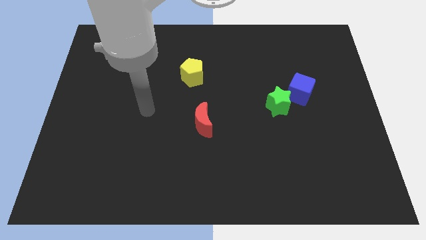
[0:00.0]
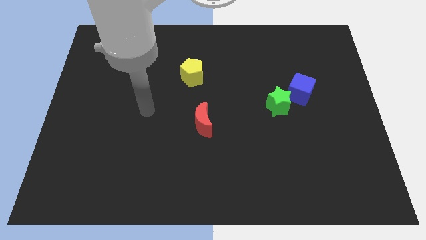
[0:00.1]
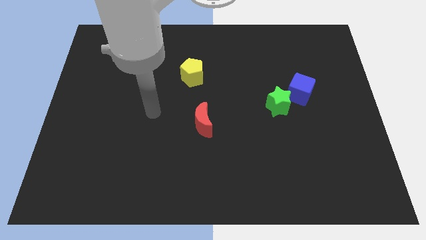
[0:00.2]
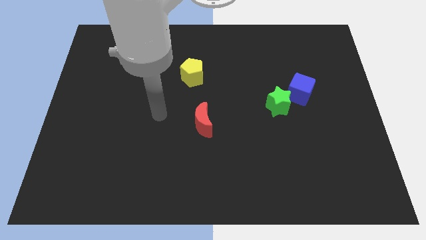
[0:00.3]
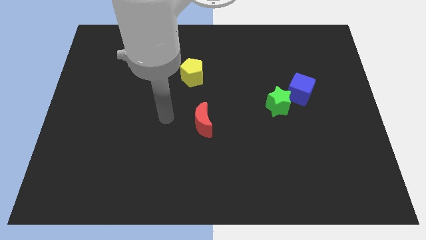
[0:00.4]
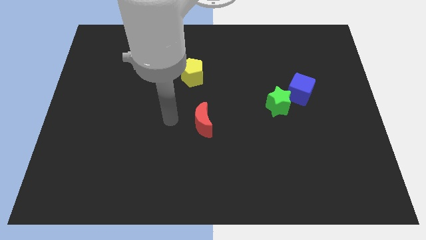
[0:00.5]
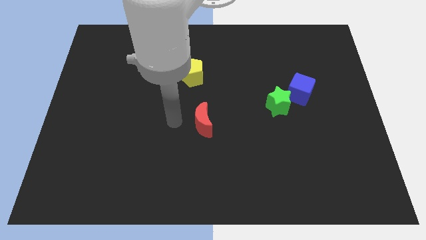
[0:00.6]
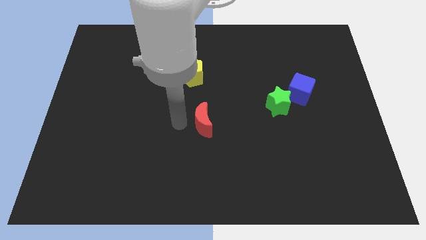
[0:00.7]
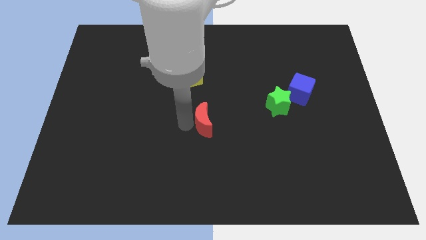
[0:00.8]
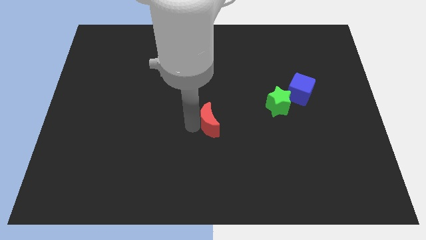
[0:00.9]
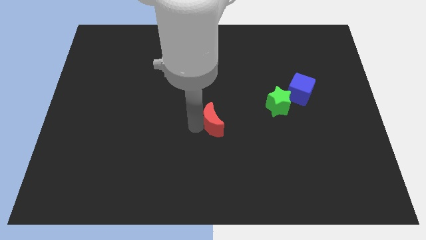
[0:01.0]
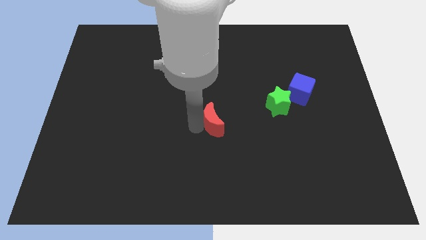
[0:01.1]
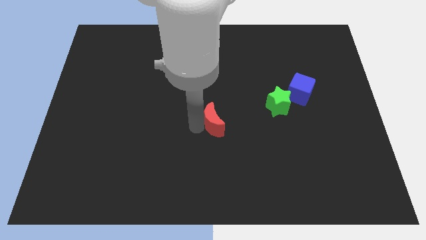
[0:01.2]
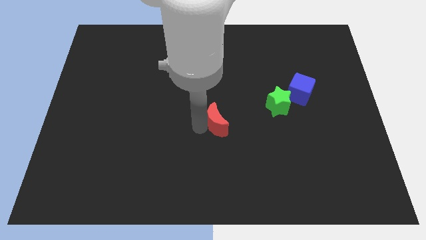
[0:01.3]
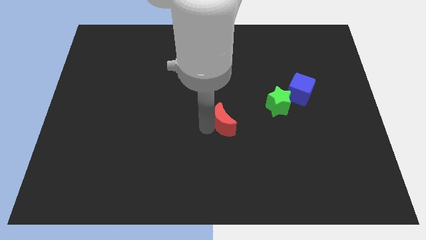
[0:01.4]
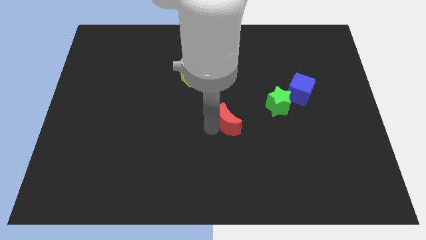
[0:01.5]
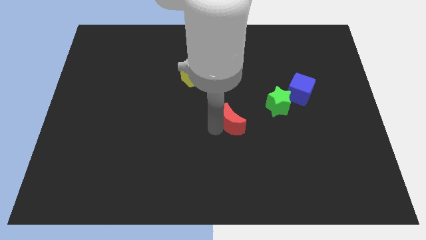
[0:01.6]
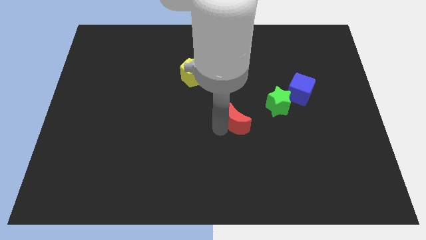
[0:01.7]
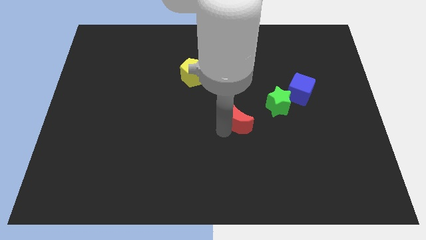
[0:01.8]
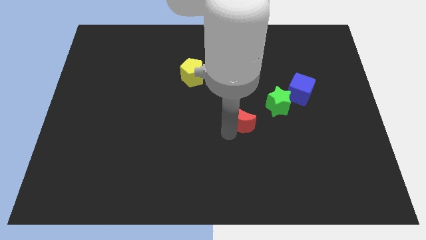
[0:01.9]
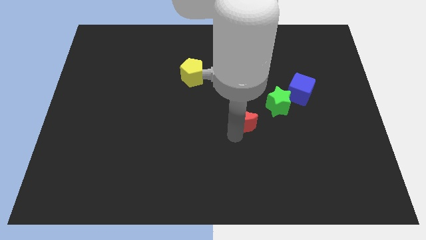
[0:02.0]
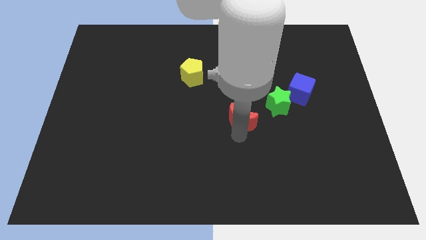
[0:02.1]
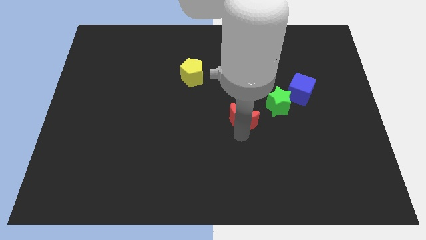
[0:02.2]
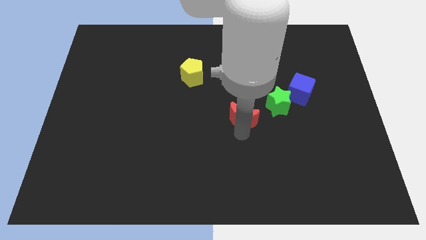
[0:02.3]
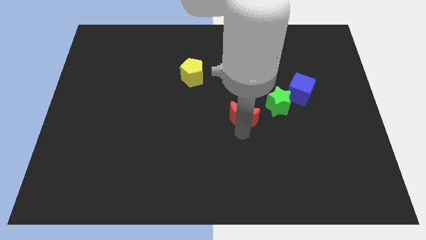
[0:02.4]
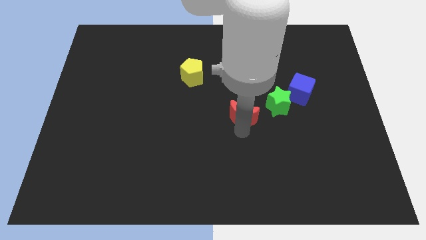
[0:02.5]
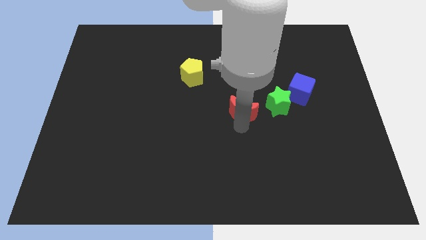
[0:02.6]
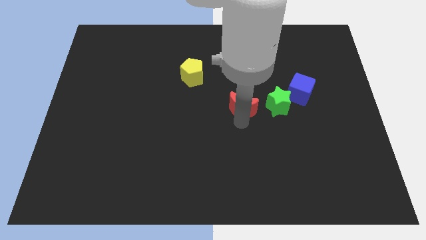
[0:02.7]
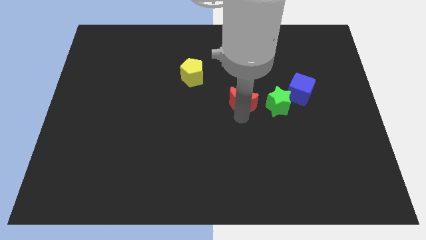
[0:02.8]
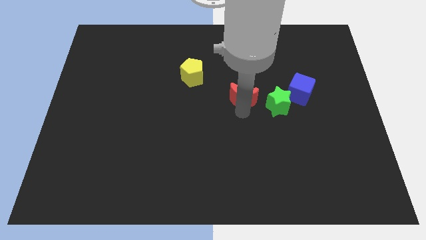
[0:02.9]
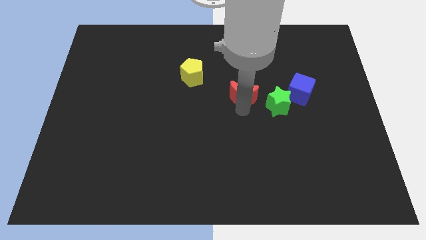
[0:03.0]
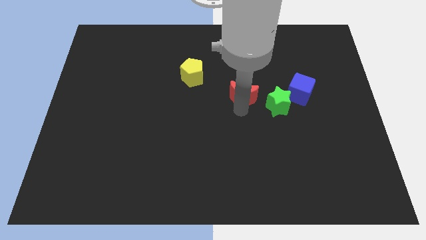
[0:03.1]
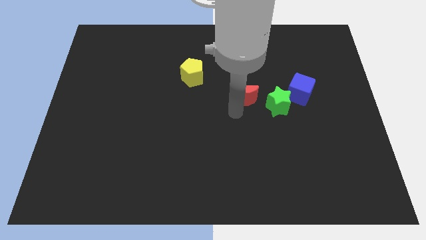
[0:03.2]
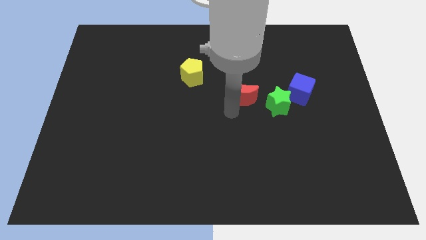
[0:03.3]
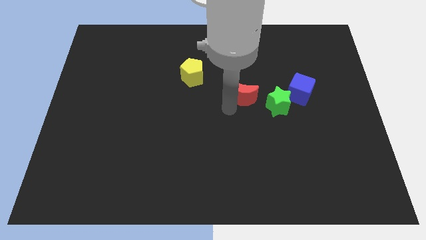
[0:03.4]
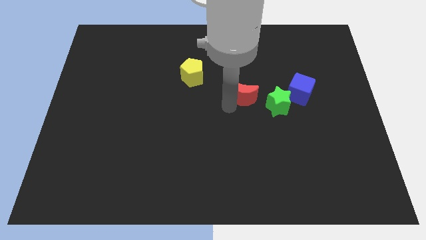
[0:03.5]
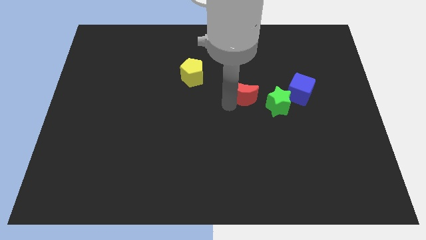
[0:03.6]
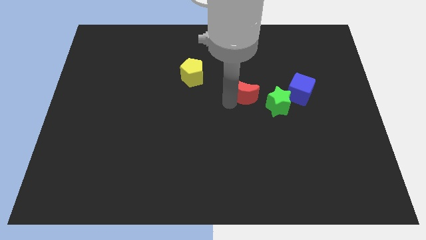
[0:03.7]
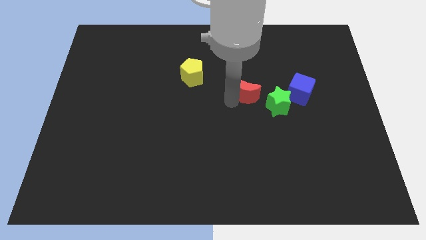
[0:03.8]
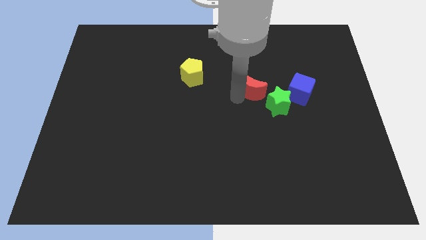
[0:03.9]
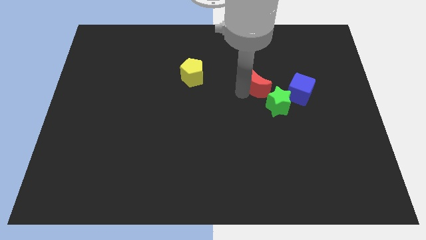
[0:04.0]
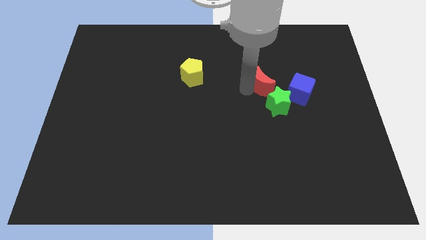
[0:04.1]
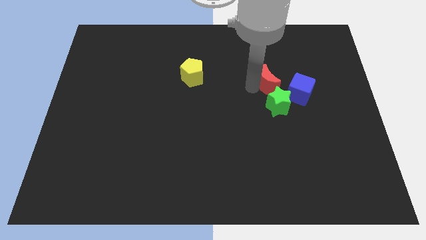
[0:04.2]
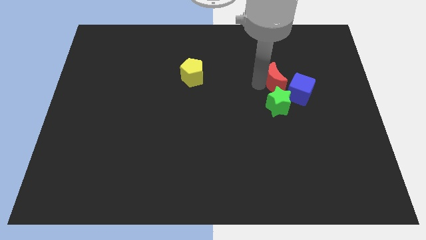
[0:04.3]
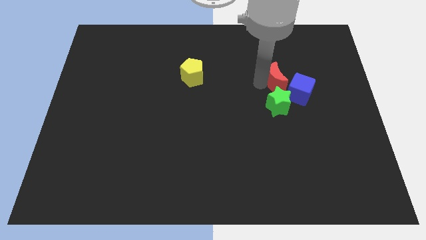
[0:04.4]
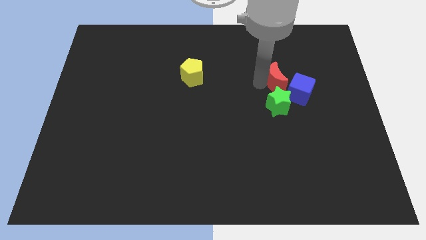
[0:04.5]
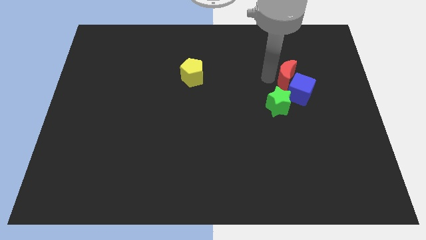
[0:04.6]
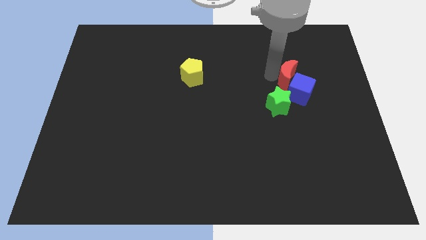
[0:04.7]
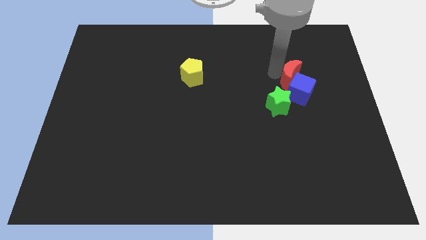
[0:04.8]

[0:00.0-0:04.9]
put the moon towards the blue block

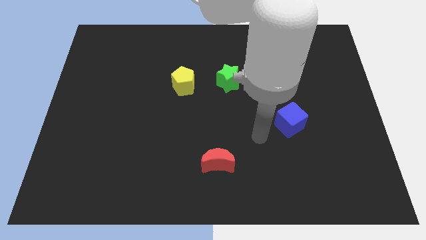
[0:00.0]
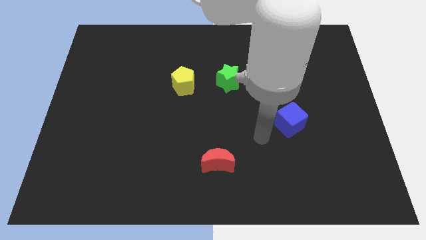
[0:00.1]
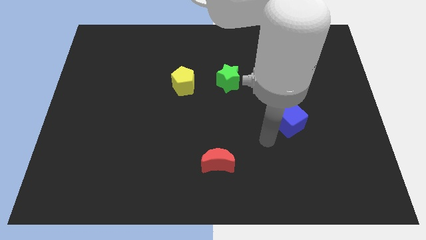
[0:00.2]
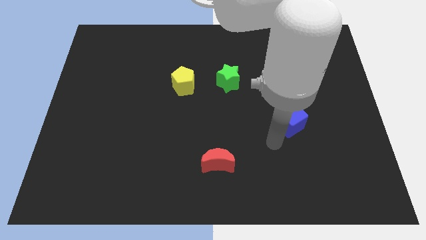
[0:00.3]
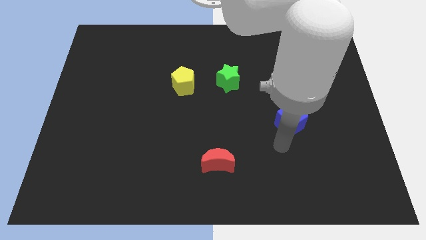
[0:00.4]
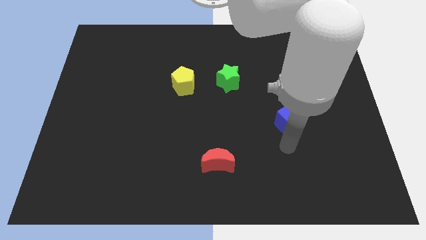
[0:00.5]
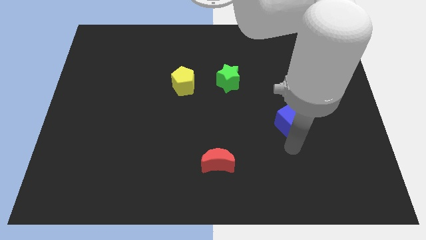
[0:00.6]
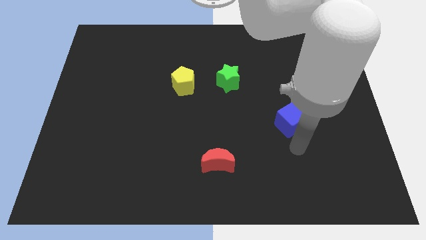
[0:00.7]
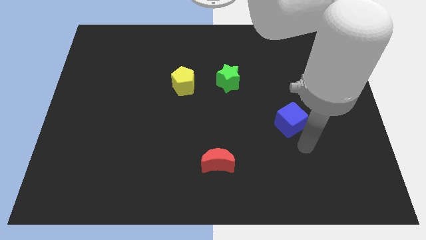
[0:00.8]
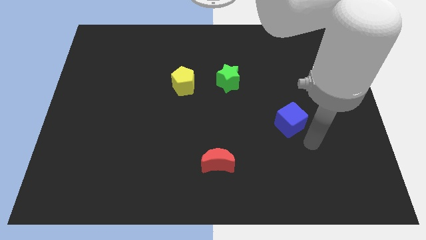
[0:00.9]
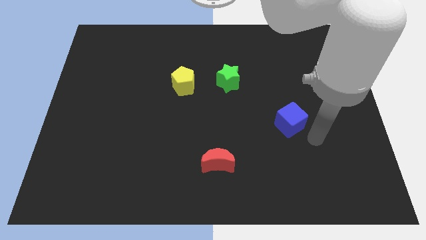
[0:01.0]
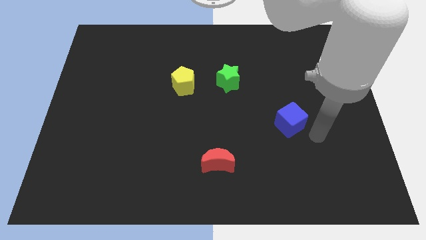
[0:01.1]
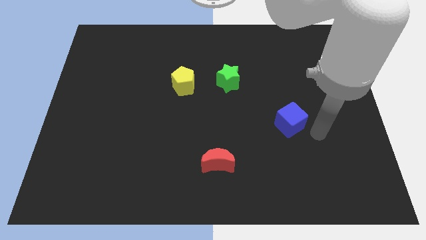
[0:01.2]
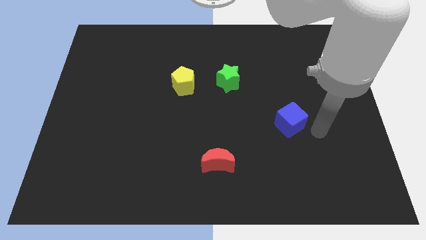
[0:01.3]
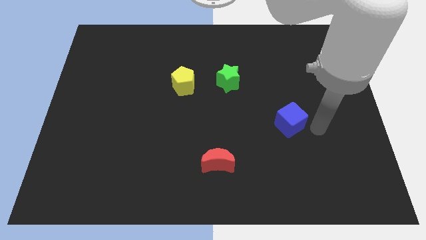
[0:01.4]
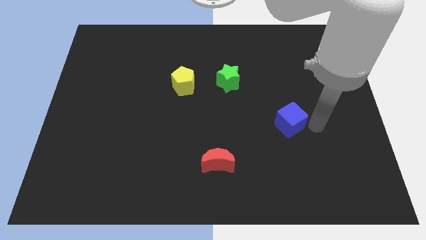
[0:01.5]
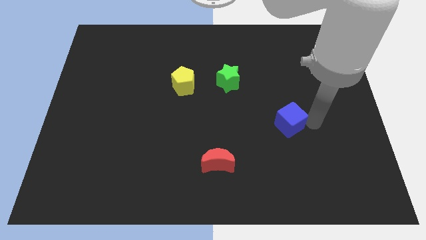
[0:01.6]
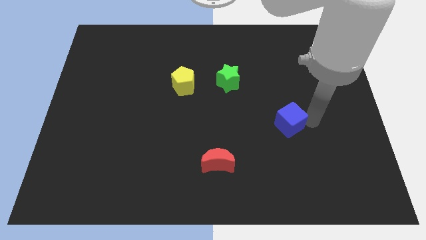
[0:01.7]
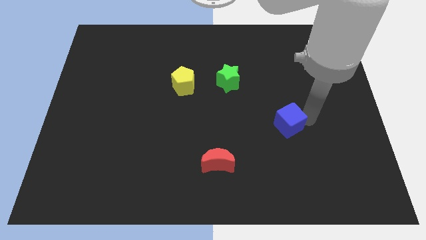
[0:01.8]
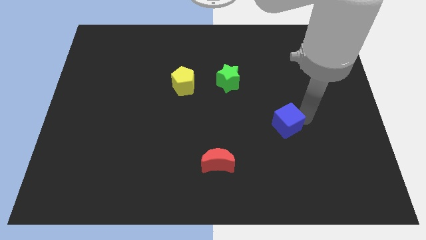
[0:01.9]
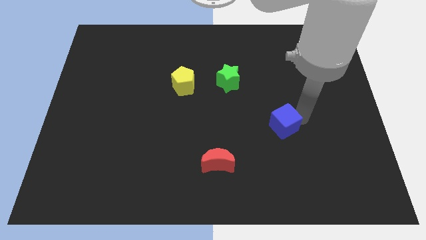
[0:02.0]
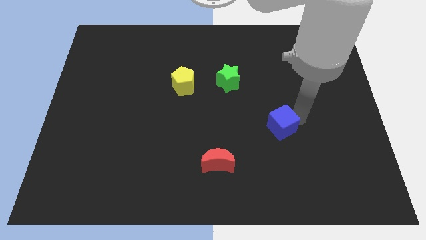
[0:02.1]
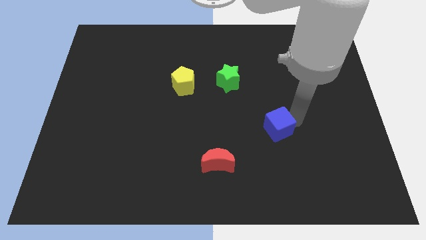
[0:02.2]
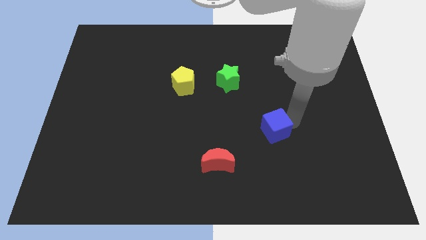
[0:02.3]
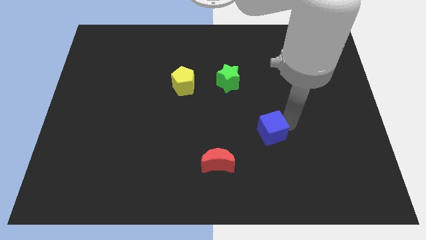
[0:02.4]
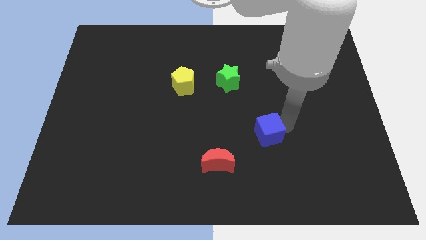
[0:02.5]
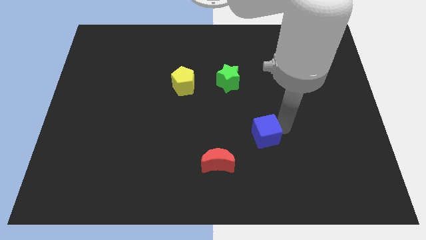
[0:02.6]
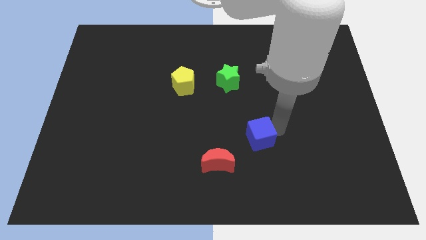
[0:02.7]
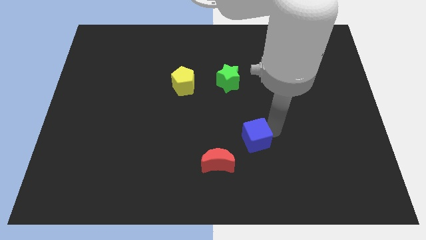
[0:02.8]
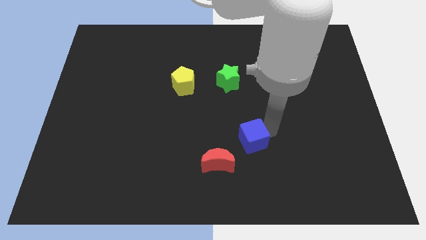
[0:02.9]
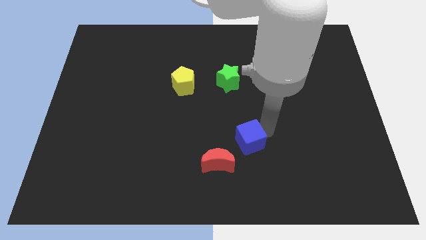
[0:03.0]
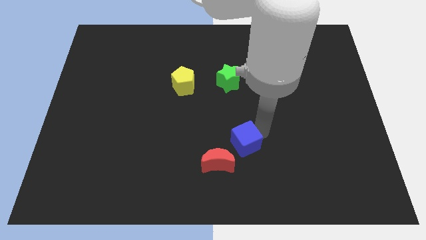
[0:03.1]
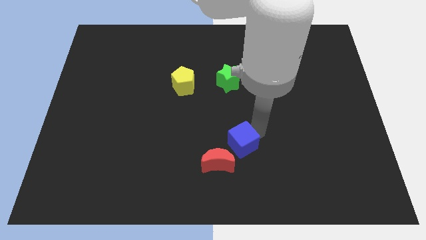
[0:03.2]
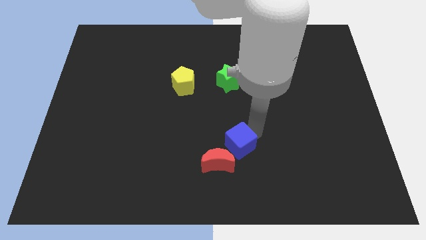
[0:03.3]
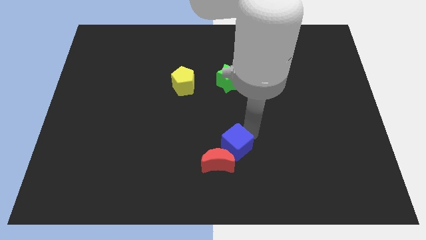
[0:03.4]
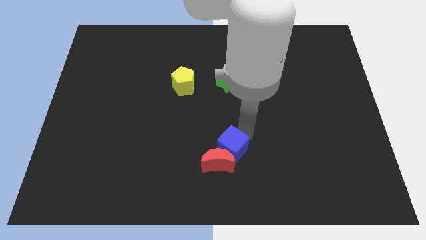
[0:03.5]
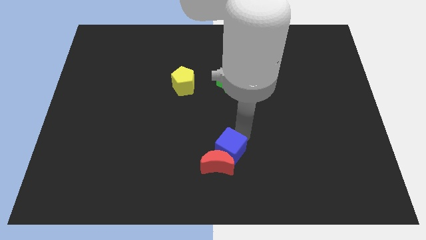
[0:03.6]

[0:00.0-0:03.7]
move the blue cube to the moon
